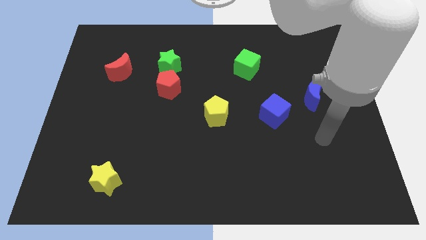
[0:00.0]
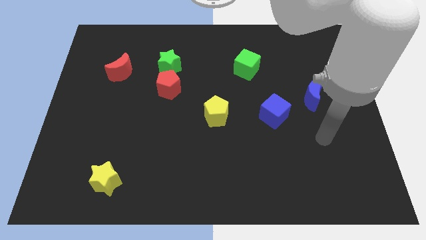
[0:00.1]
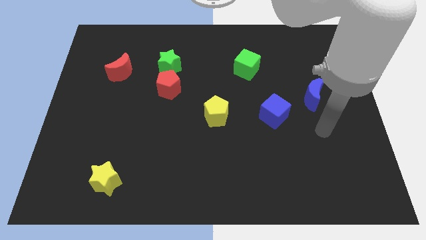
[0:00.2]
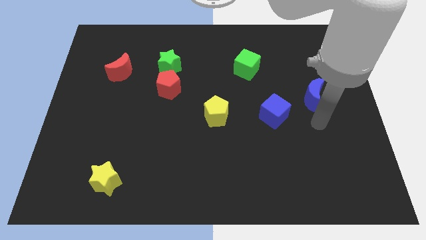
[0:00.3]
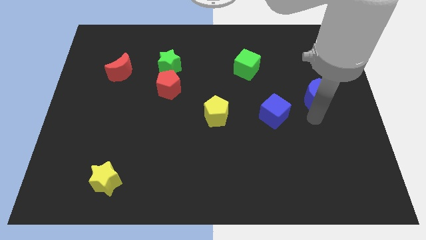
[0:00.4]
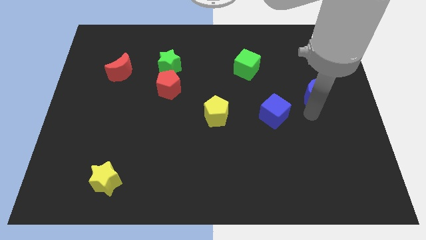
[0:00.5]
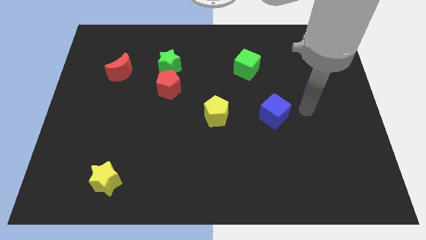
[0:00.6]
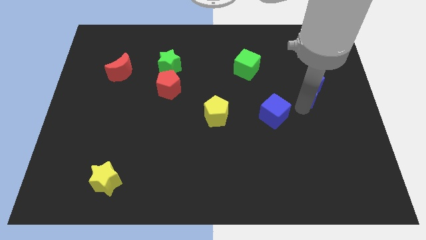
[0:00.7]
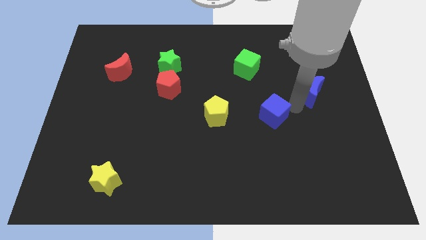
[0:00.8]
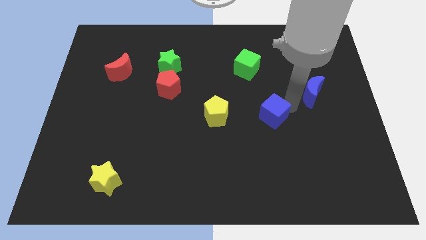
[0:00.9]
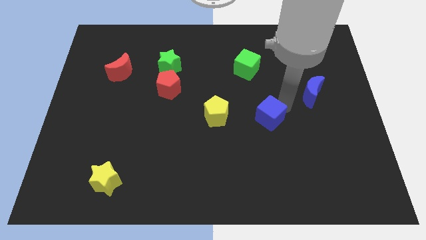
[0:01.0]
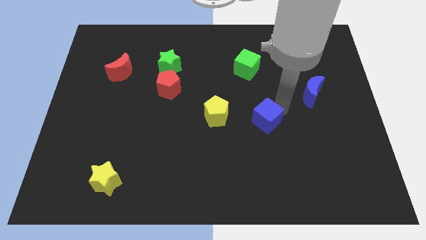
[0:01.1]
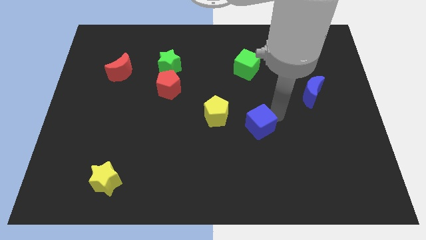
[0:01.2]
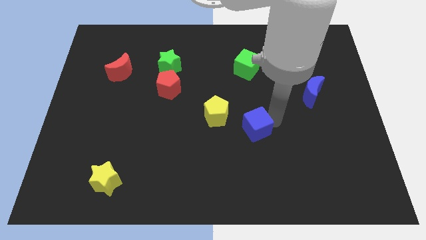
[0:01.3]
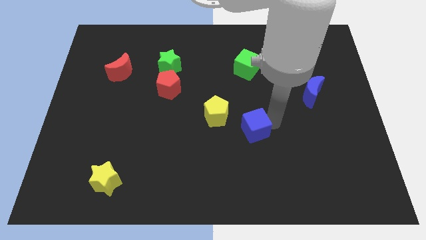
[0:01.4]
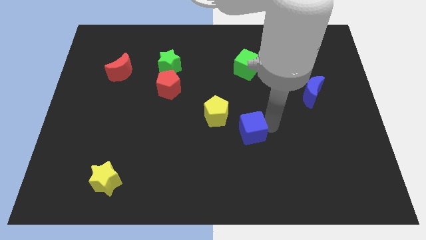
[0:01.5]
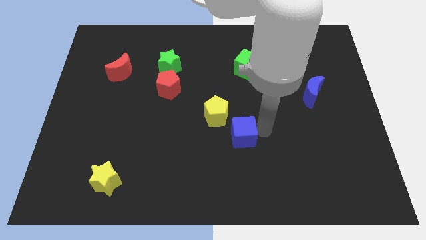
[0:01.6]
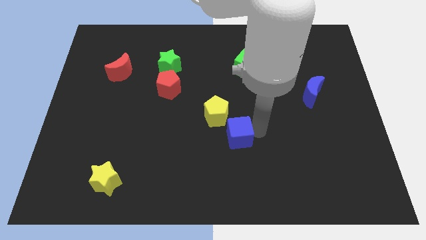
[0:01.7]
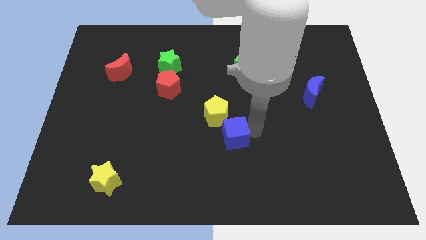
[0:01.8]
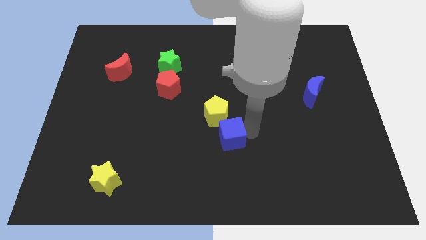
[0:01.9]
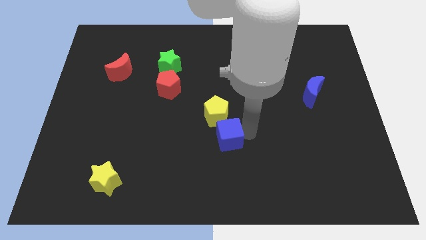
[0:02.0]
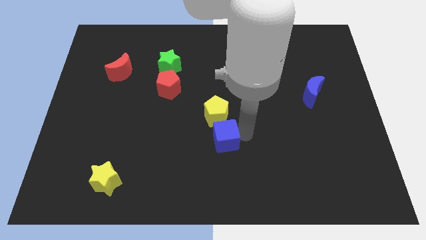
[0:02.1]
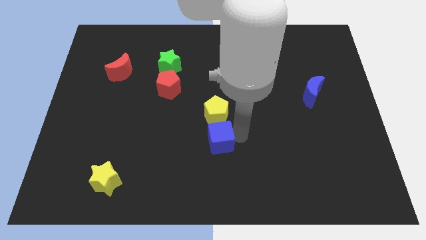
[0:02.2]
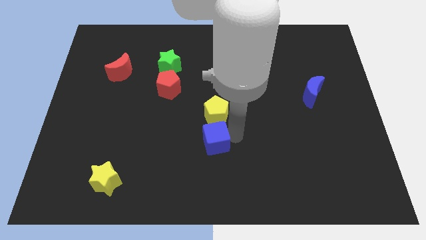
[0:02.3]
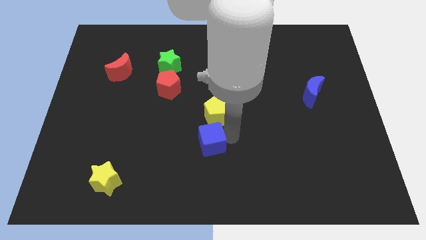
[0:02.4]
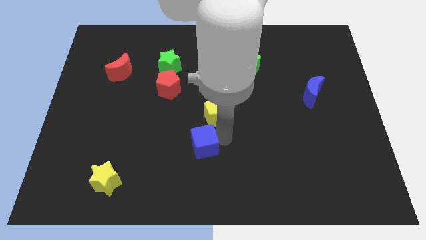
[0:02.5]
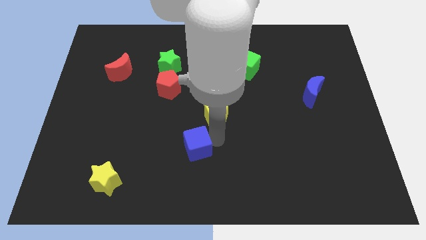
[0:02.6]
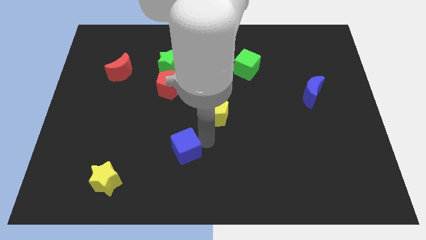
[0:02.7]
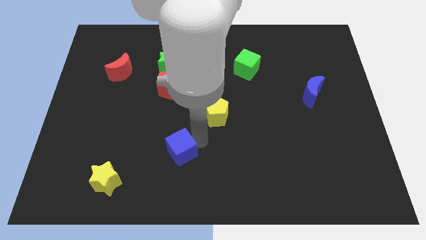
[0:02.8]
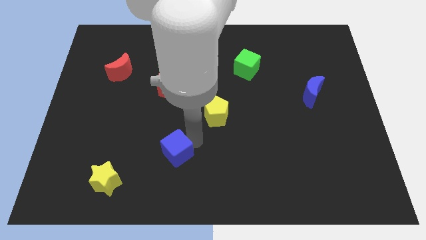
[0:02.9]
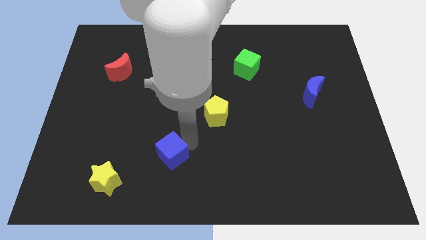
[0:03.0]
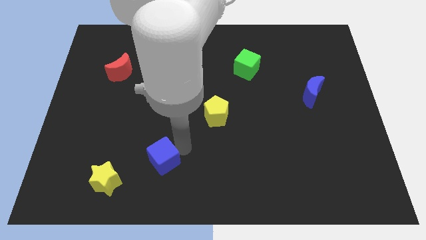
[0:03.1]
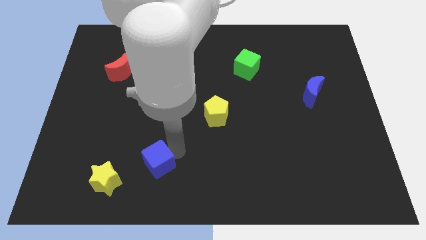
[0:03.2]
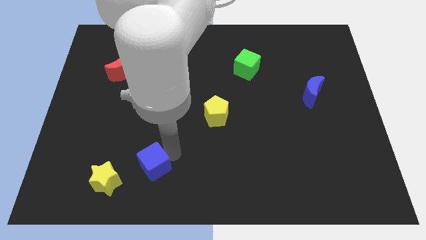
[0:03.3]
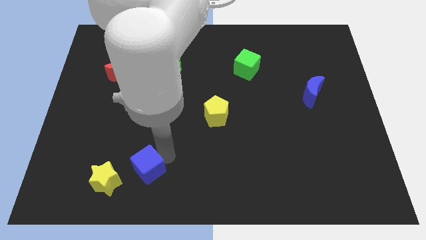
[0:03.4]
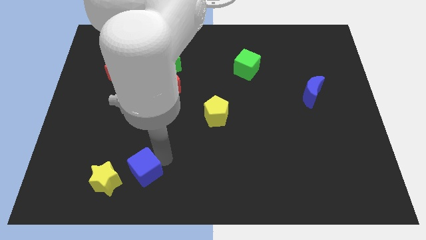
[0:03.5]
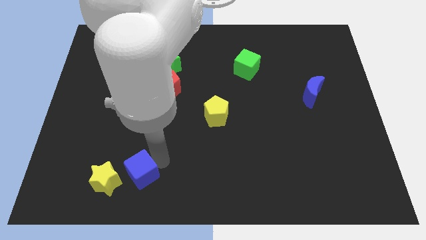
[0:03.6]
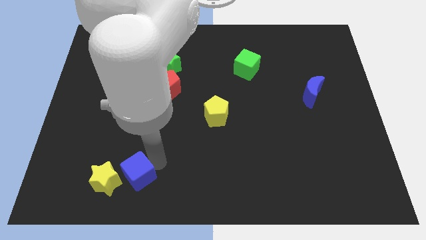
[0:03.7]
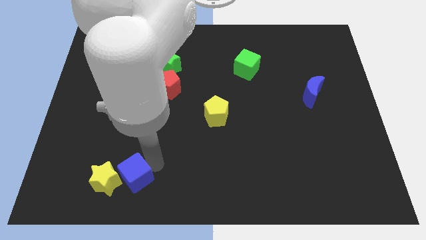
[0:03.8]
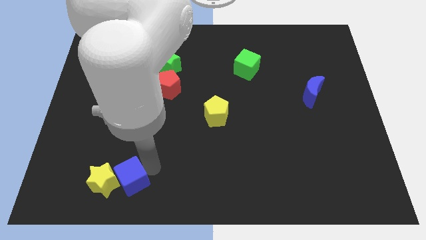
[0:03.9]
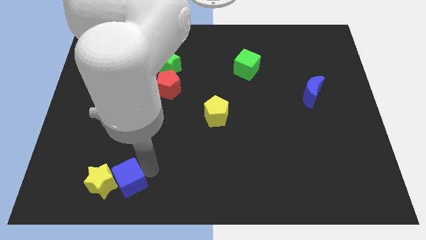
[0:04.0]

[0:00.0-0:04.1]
push the blue cube next to the yellow star

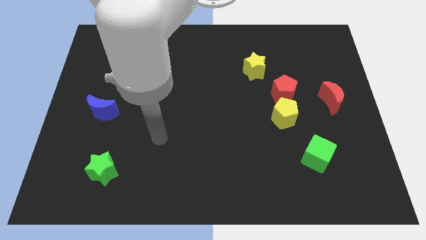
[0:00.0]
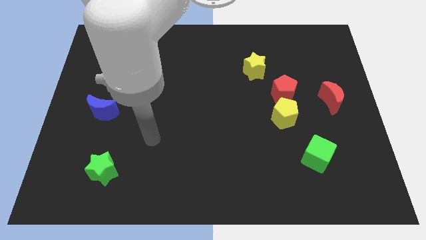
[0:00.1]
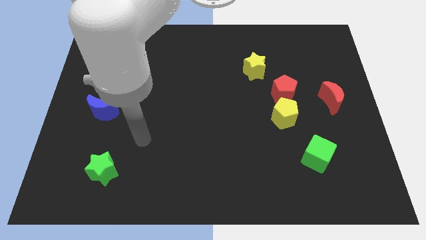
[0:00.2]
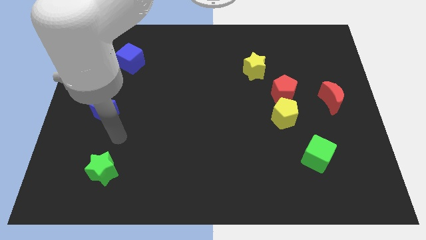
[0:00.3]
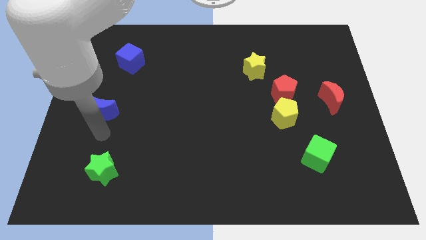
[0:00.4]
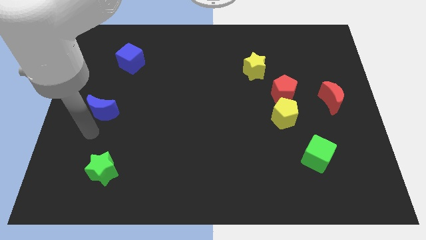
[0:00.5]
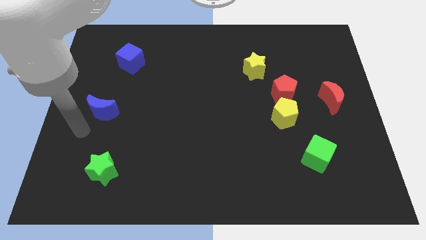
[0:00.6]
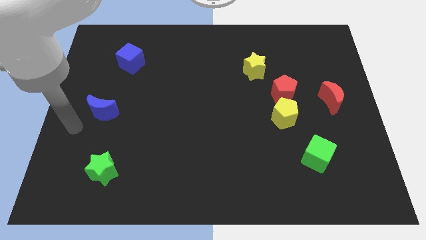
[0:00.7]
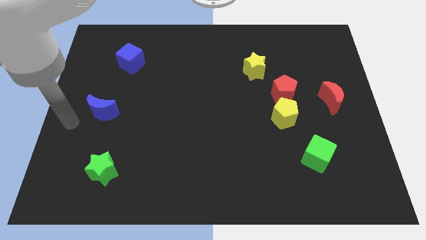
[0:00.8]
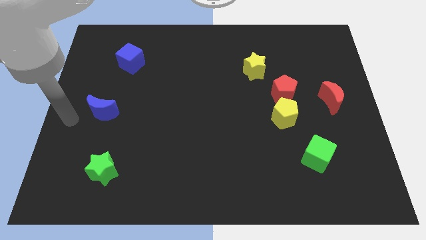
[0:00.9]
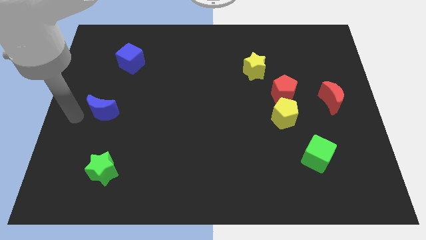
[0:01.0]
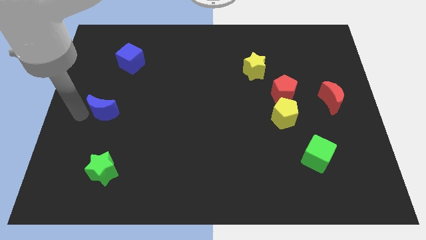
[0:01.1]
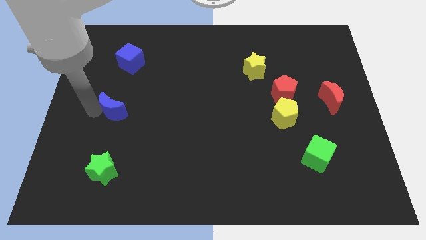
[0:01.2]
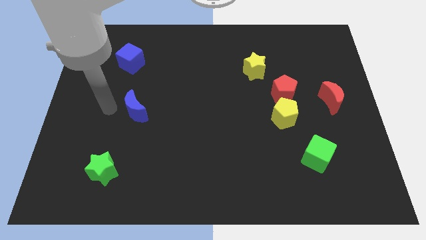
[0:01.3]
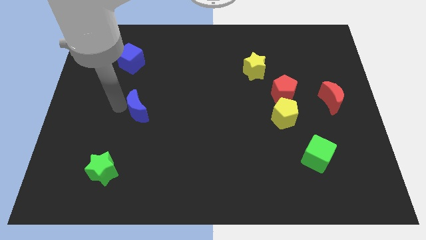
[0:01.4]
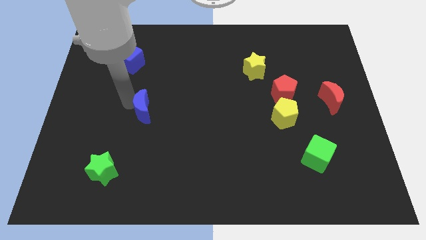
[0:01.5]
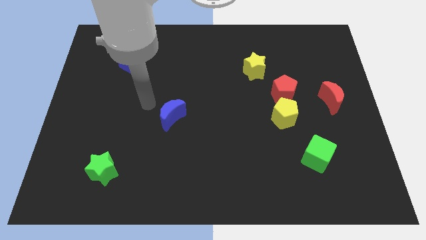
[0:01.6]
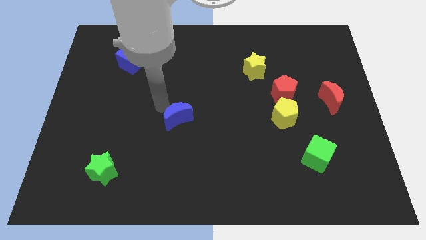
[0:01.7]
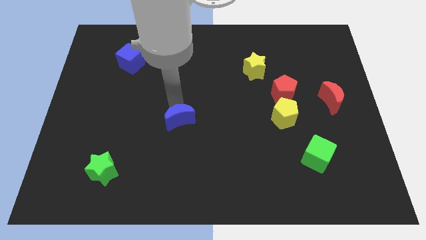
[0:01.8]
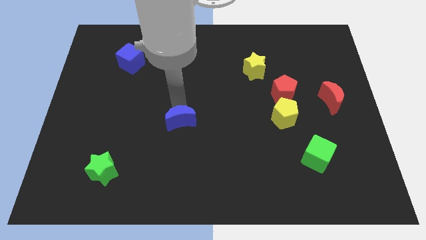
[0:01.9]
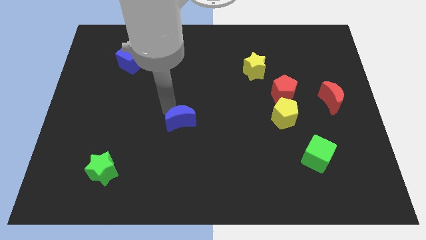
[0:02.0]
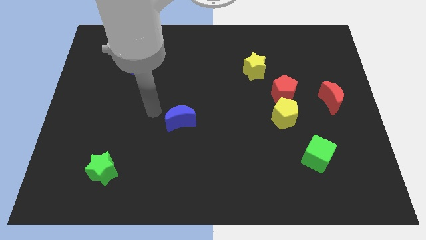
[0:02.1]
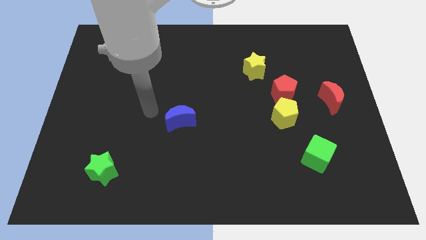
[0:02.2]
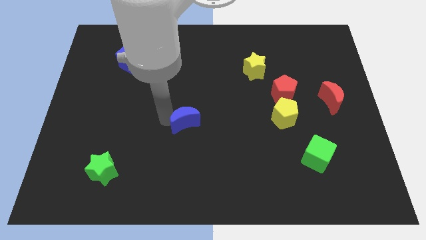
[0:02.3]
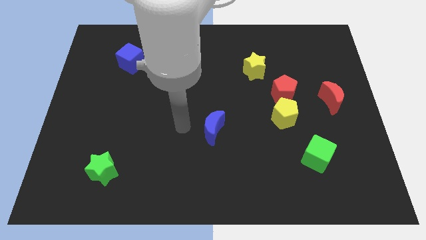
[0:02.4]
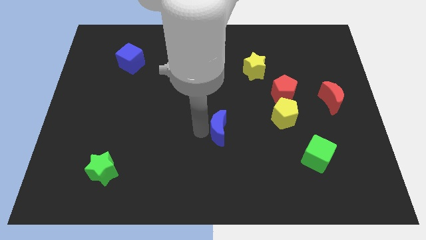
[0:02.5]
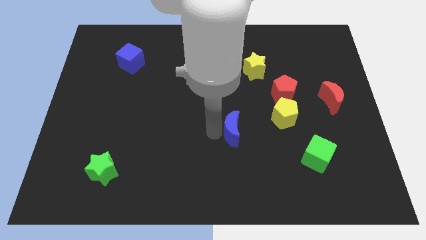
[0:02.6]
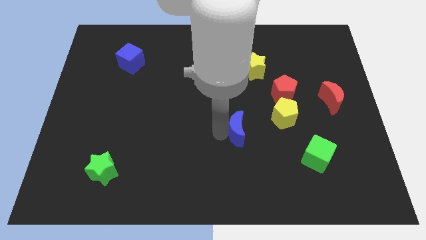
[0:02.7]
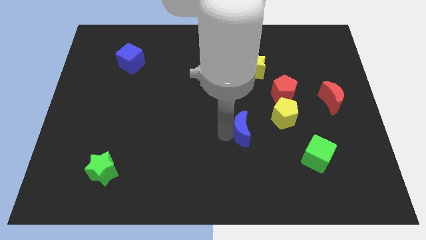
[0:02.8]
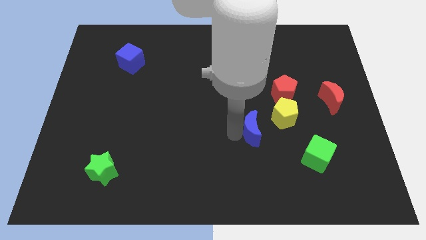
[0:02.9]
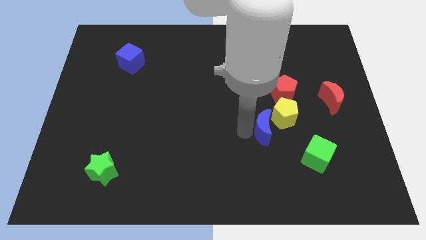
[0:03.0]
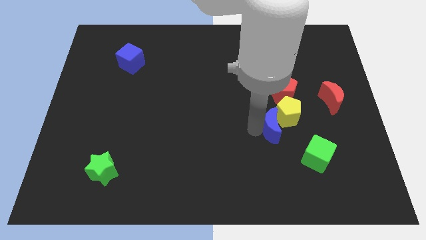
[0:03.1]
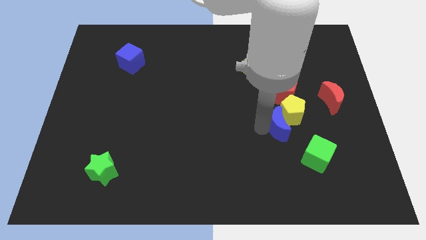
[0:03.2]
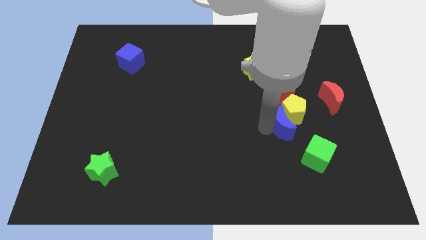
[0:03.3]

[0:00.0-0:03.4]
move the blue moon to the yellow pentagon

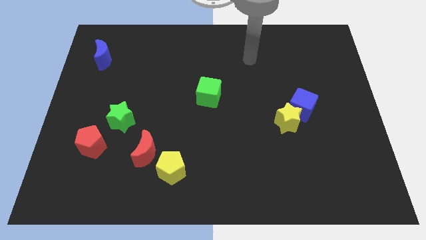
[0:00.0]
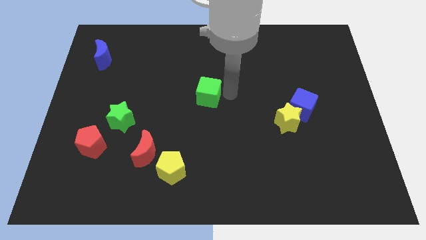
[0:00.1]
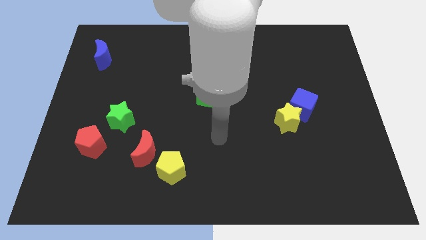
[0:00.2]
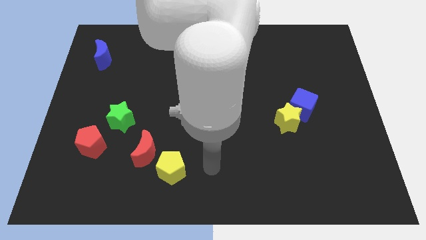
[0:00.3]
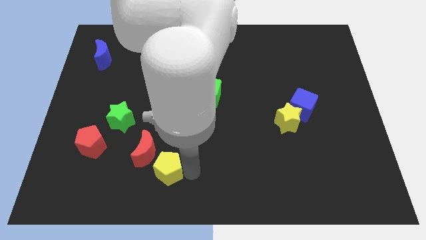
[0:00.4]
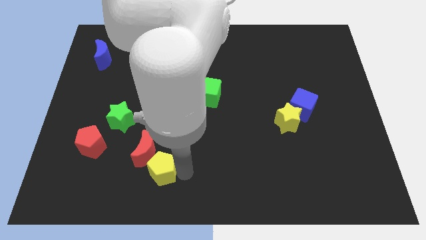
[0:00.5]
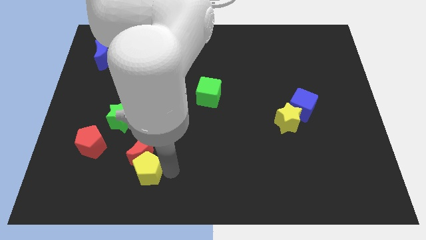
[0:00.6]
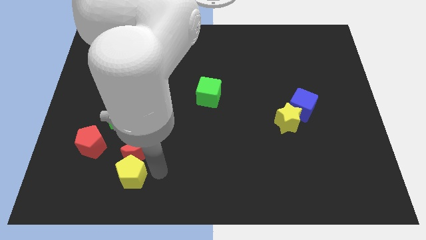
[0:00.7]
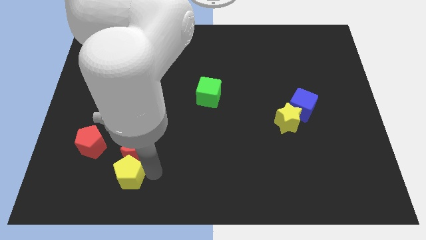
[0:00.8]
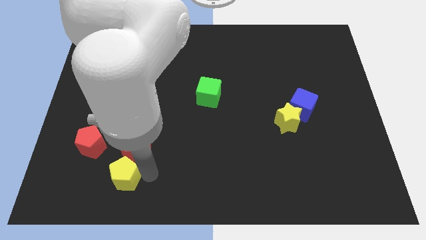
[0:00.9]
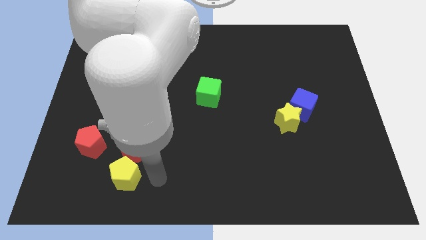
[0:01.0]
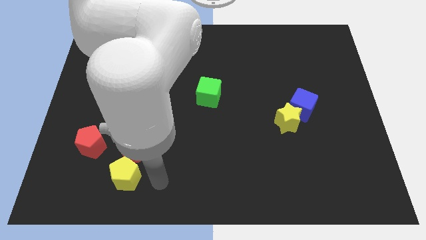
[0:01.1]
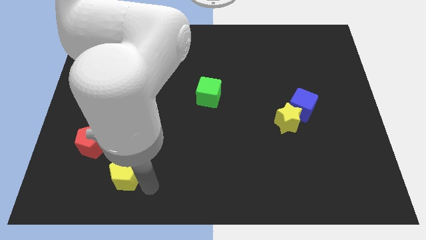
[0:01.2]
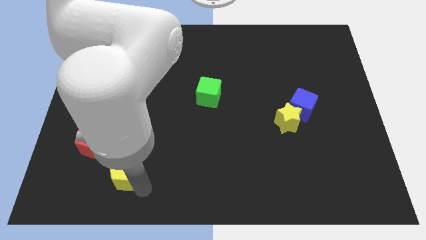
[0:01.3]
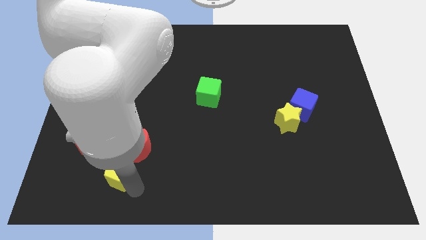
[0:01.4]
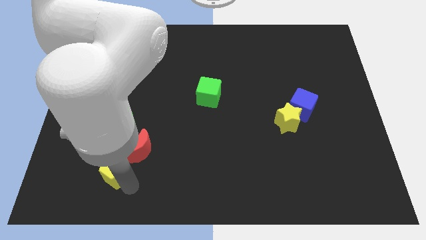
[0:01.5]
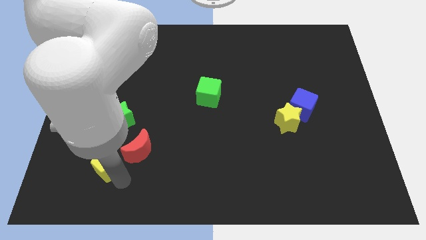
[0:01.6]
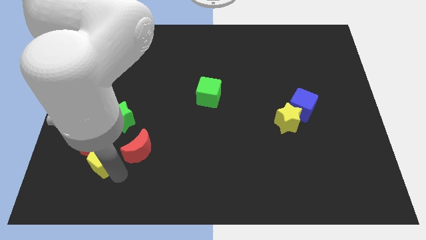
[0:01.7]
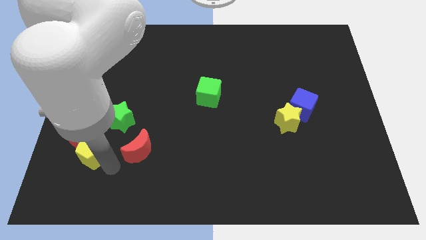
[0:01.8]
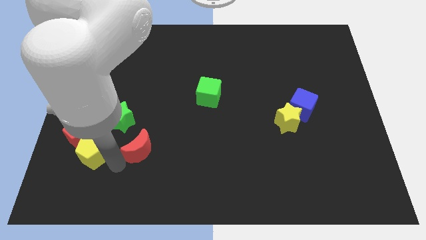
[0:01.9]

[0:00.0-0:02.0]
slide the yellow pentagon next to the red pentagon
